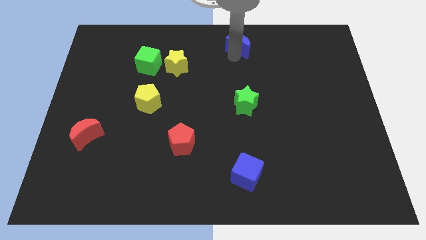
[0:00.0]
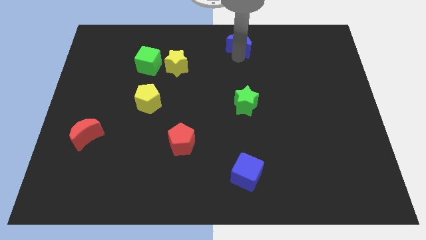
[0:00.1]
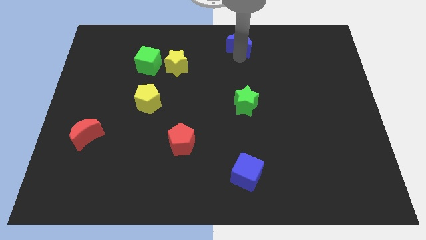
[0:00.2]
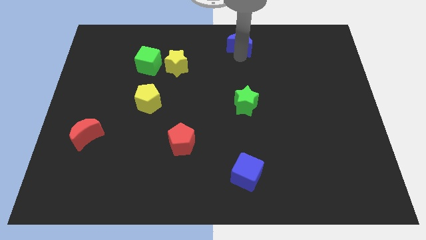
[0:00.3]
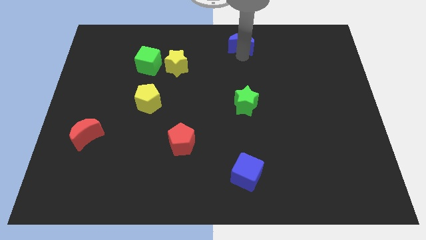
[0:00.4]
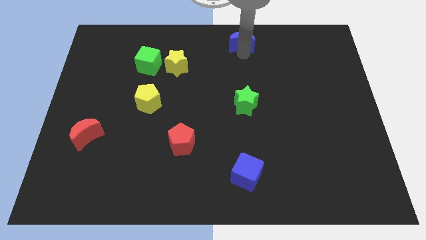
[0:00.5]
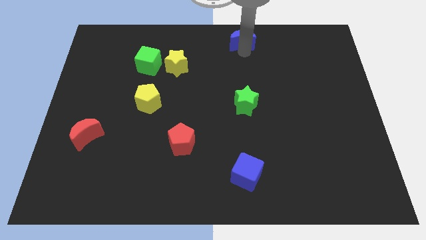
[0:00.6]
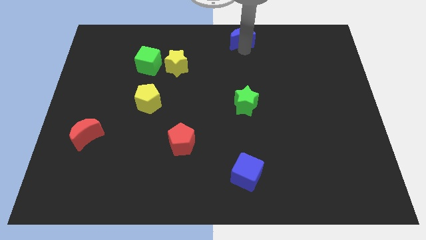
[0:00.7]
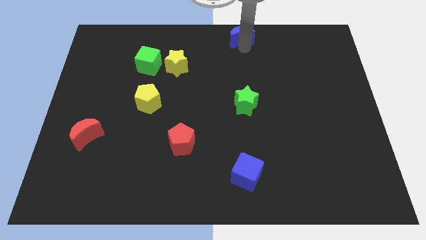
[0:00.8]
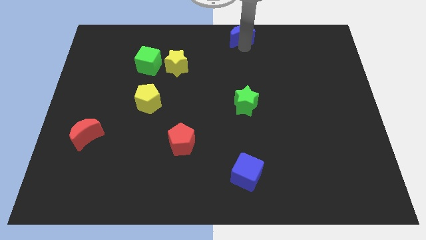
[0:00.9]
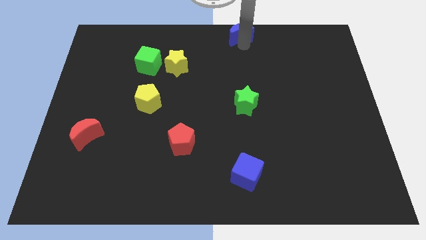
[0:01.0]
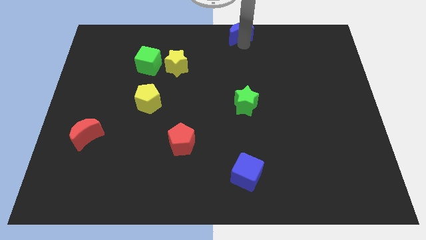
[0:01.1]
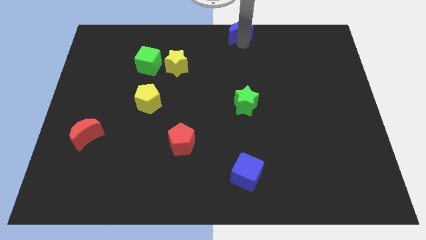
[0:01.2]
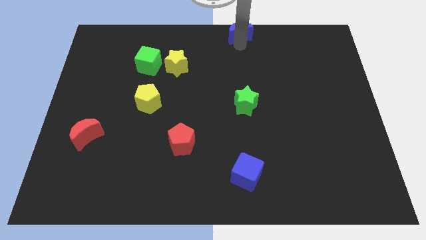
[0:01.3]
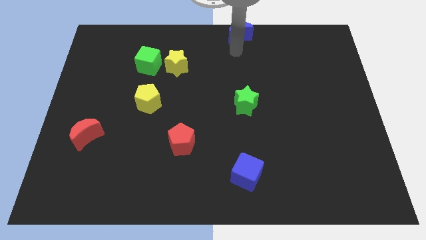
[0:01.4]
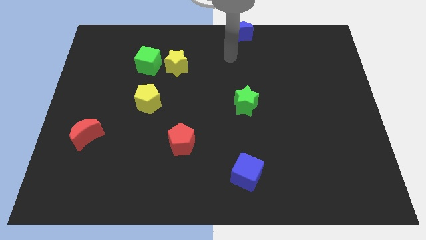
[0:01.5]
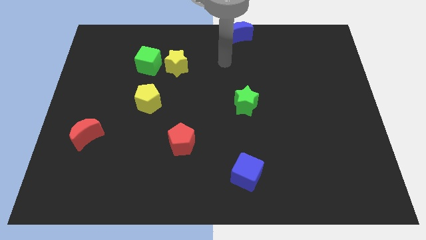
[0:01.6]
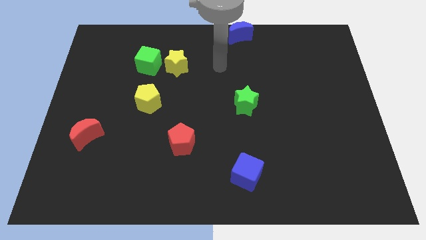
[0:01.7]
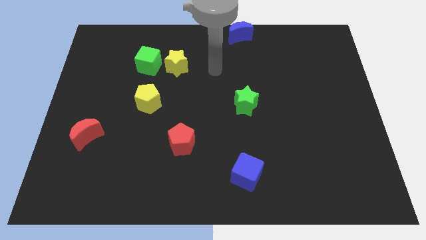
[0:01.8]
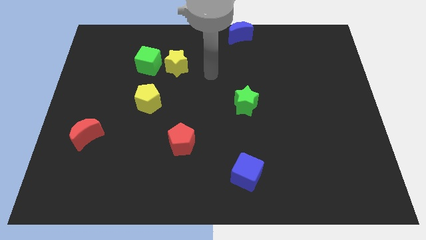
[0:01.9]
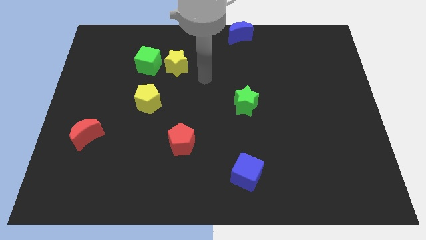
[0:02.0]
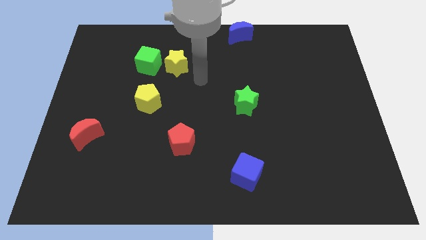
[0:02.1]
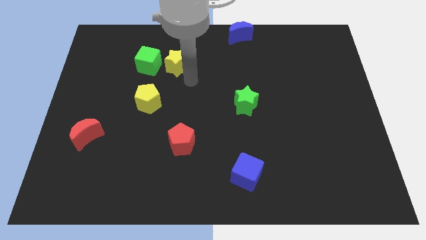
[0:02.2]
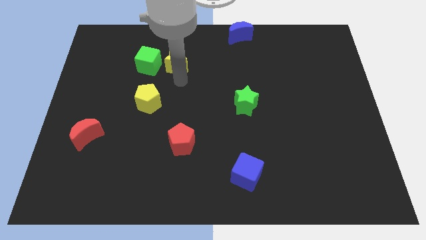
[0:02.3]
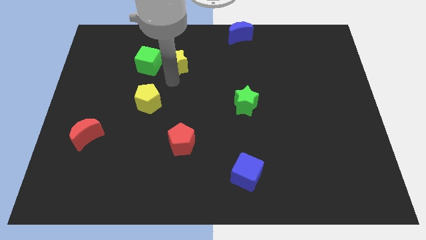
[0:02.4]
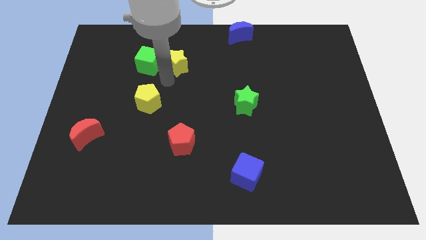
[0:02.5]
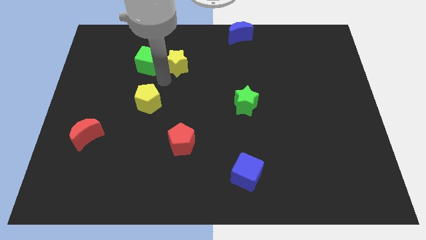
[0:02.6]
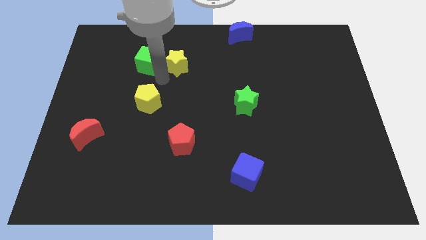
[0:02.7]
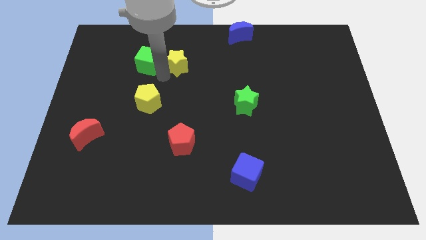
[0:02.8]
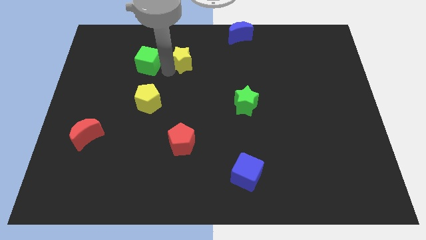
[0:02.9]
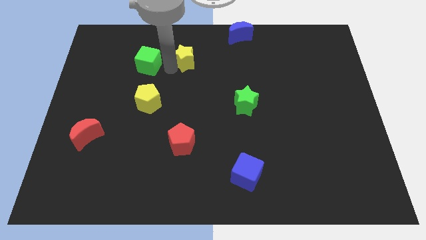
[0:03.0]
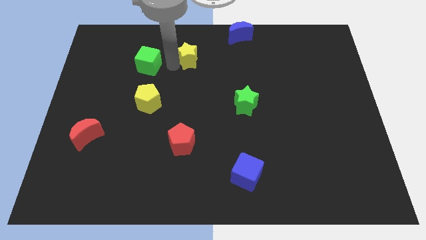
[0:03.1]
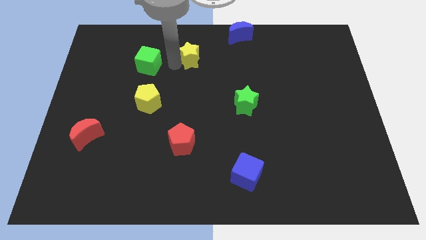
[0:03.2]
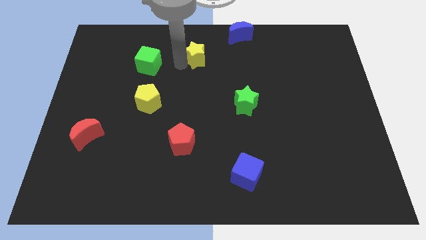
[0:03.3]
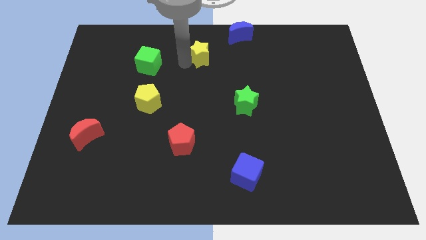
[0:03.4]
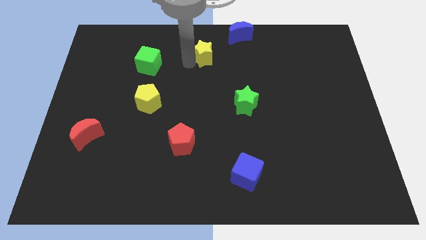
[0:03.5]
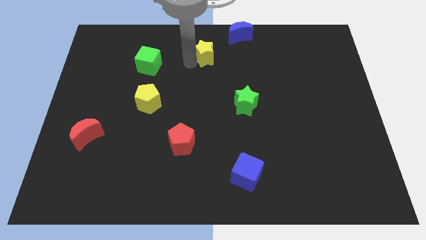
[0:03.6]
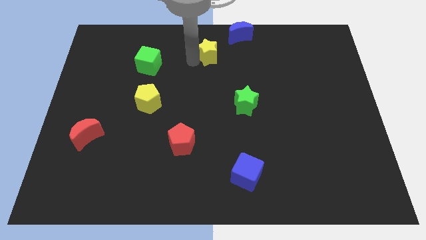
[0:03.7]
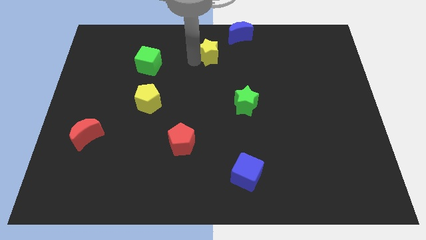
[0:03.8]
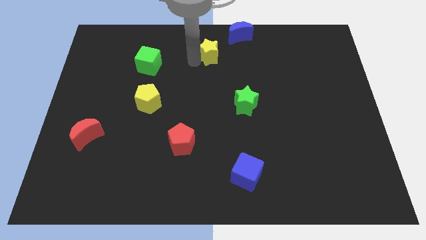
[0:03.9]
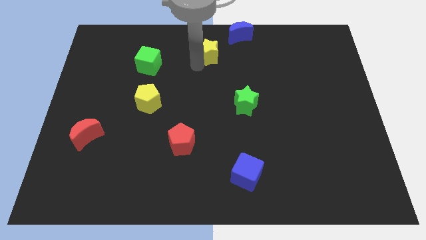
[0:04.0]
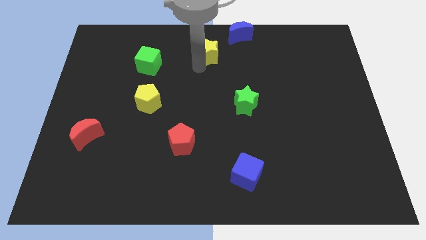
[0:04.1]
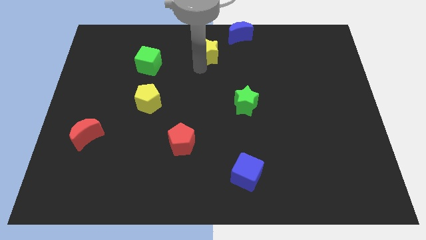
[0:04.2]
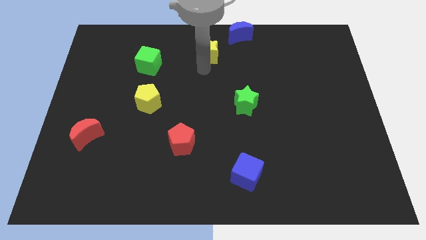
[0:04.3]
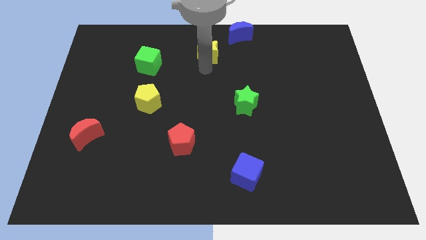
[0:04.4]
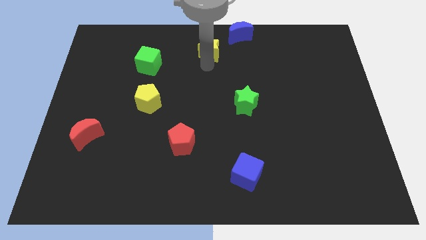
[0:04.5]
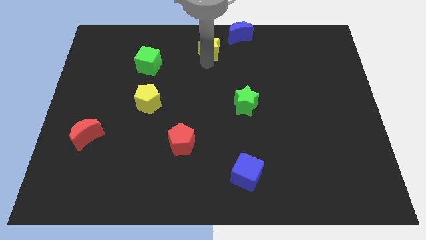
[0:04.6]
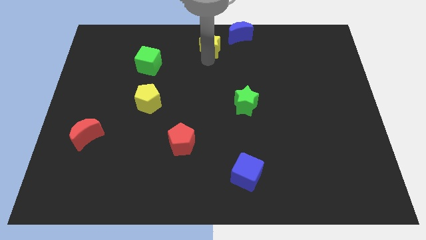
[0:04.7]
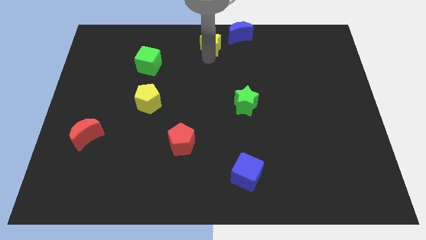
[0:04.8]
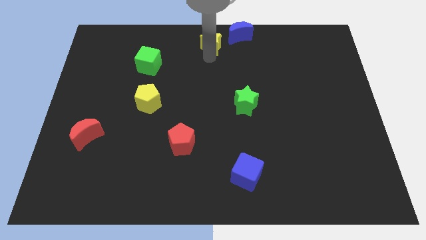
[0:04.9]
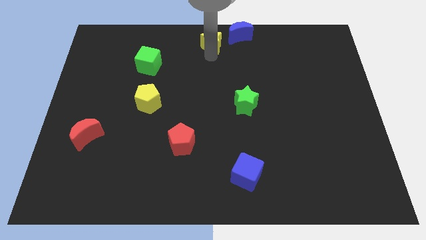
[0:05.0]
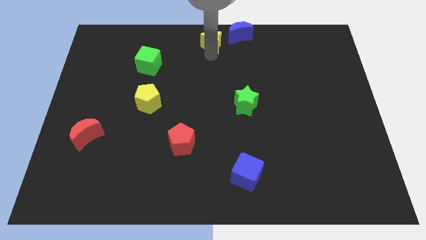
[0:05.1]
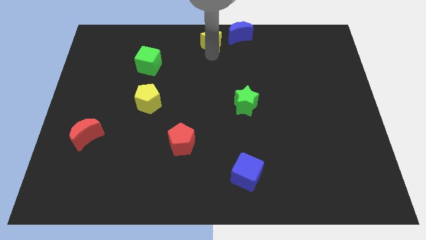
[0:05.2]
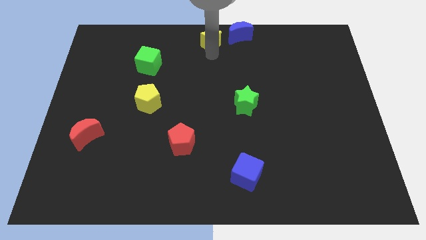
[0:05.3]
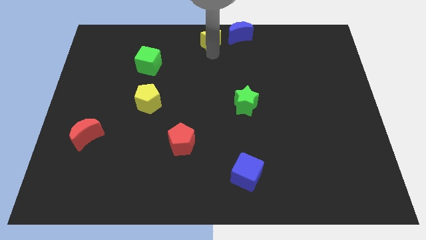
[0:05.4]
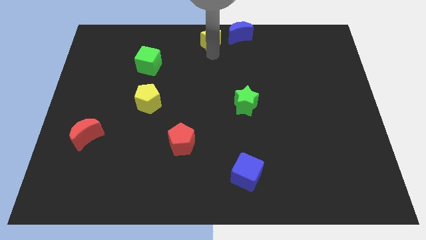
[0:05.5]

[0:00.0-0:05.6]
slide the yellow star towards the bottom left side of the blue moon

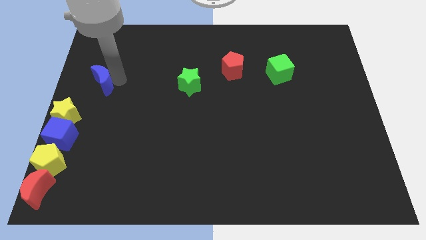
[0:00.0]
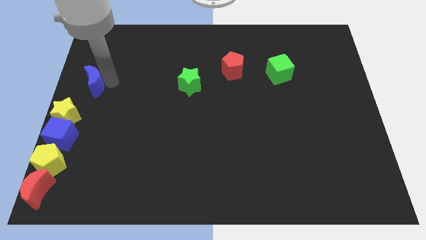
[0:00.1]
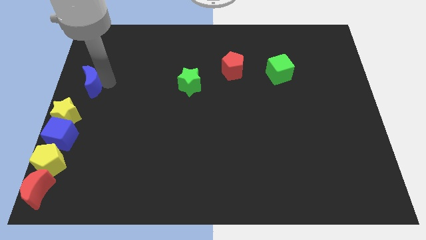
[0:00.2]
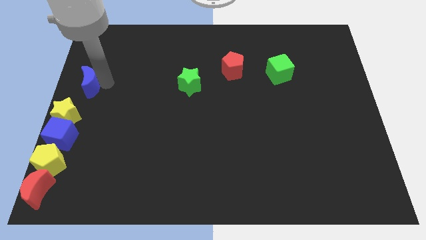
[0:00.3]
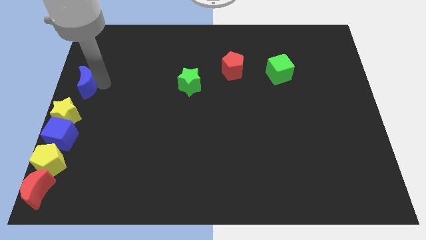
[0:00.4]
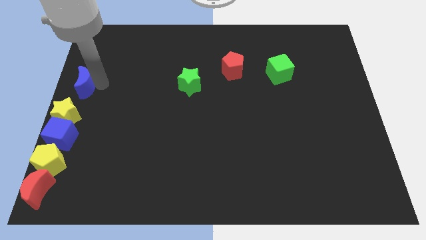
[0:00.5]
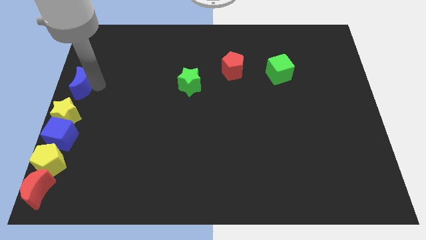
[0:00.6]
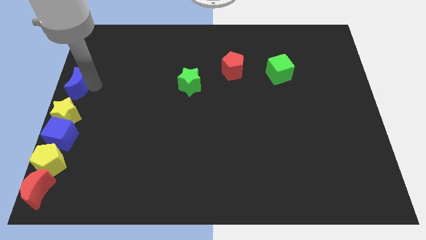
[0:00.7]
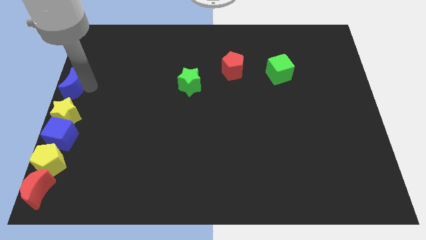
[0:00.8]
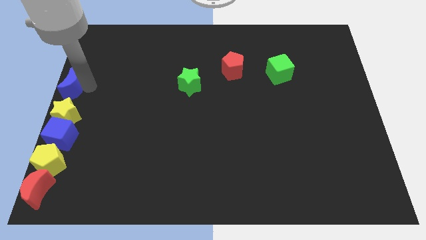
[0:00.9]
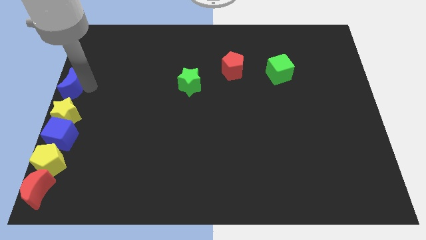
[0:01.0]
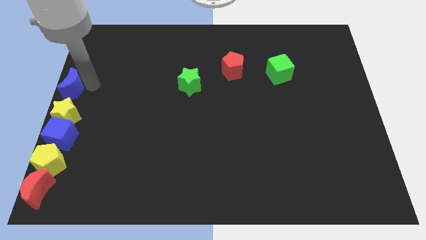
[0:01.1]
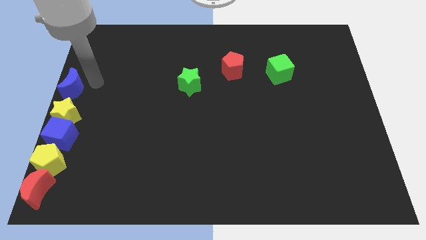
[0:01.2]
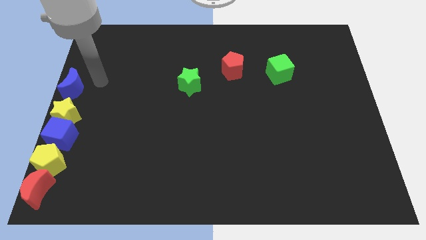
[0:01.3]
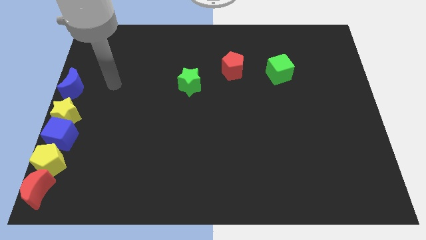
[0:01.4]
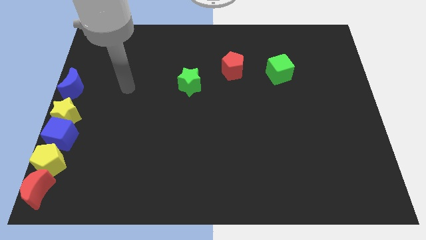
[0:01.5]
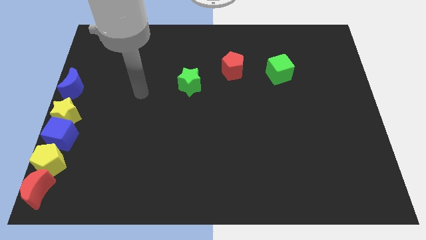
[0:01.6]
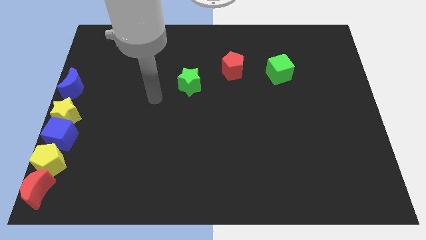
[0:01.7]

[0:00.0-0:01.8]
place the blue moon above the yellow star at top left corner

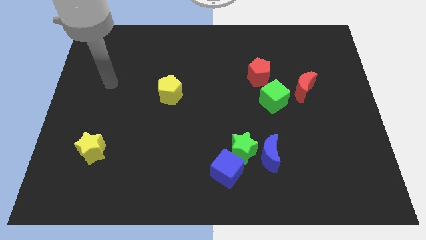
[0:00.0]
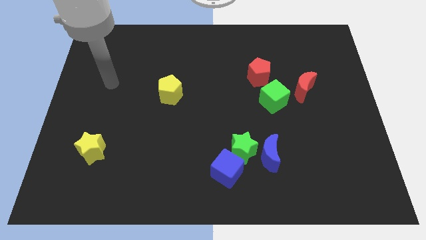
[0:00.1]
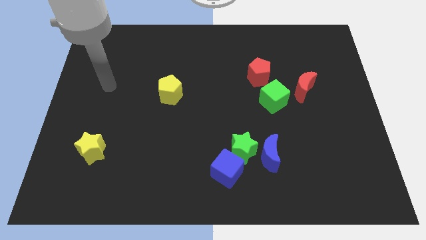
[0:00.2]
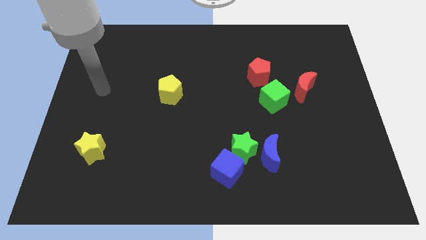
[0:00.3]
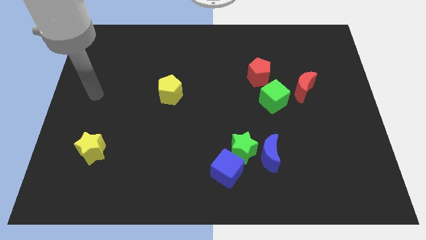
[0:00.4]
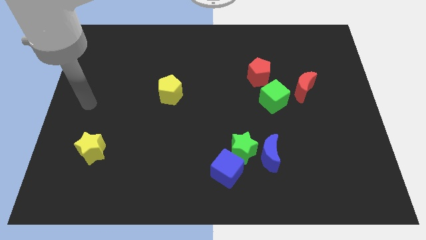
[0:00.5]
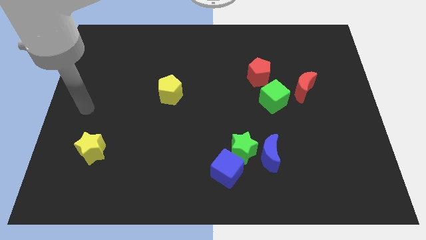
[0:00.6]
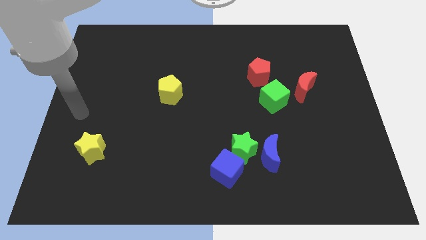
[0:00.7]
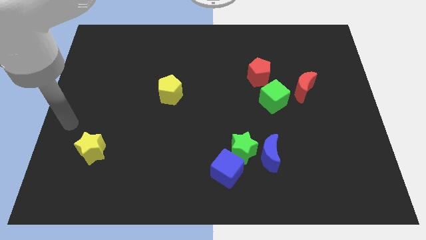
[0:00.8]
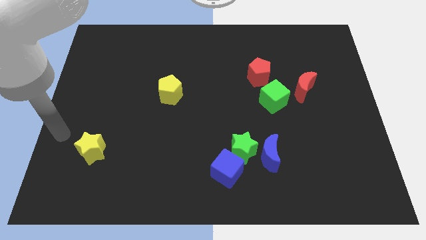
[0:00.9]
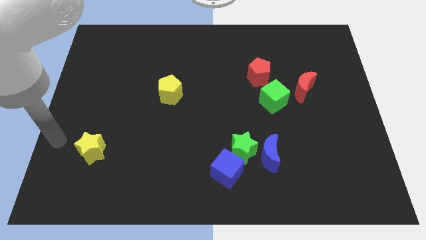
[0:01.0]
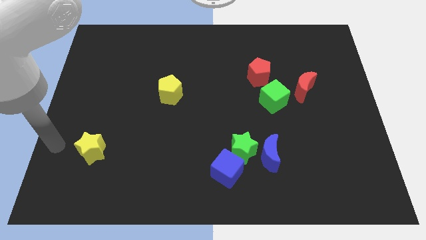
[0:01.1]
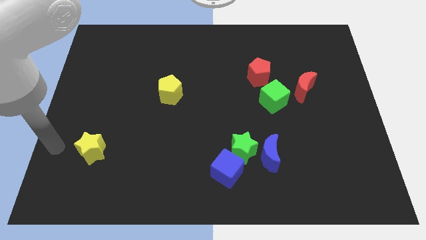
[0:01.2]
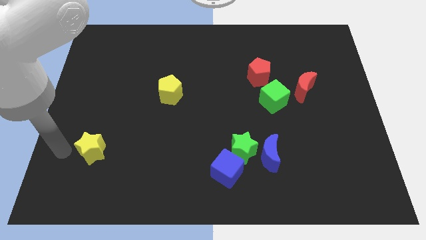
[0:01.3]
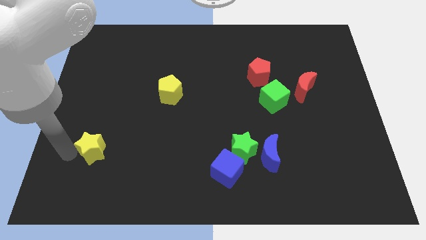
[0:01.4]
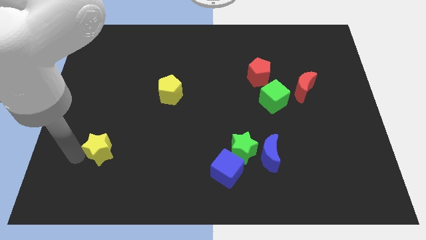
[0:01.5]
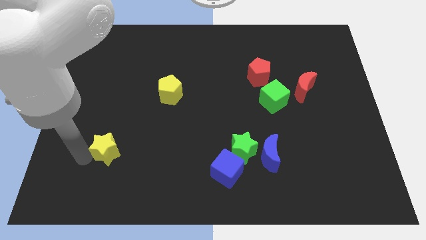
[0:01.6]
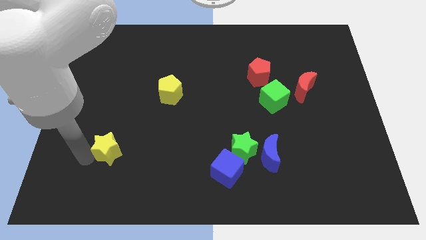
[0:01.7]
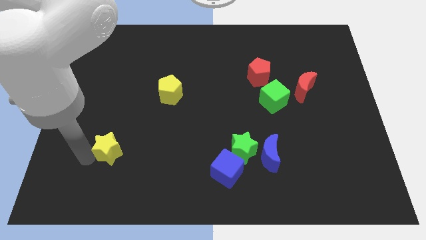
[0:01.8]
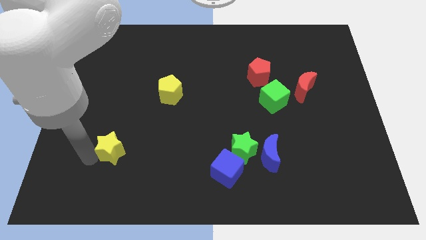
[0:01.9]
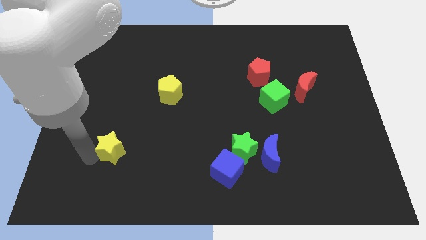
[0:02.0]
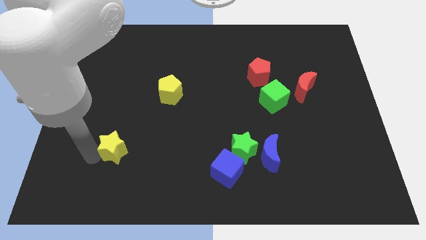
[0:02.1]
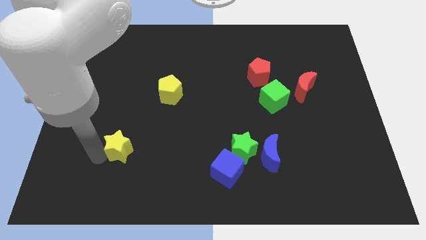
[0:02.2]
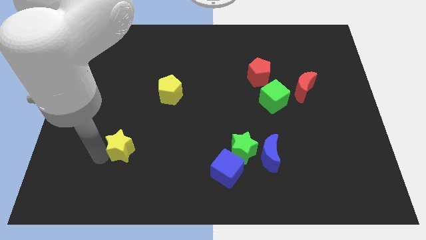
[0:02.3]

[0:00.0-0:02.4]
push the yellow star slightly to the right
